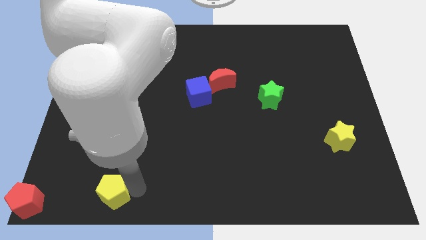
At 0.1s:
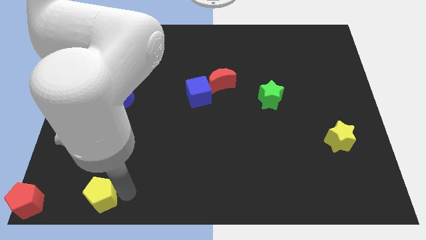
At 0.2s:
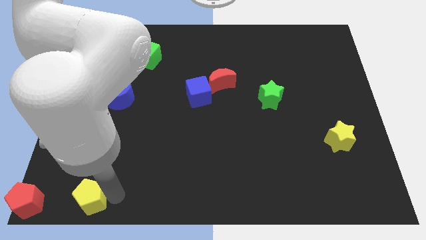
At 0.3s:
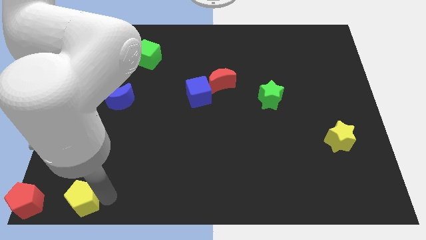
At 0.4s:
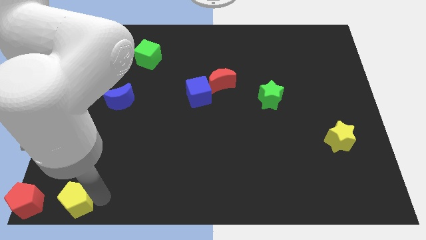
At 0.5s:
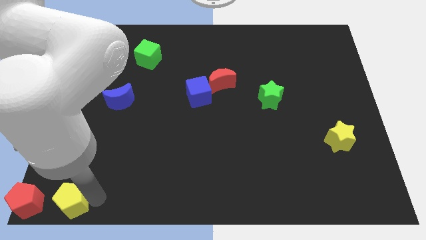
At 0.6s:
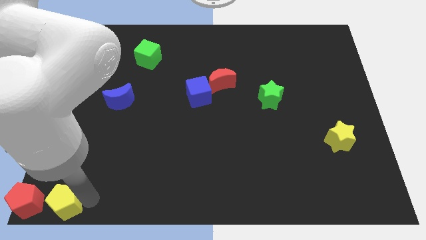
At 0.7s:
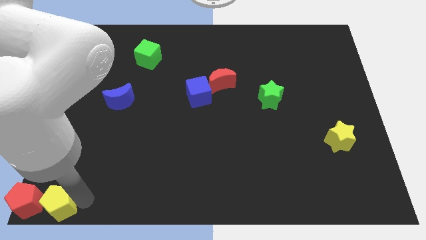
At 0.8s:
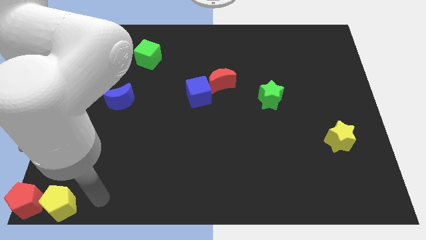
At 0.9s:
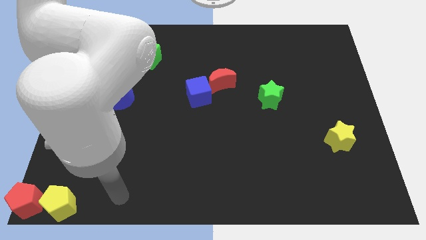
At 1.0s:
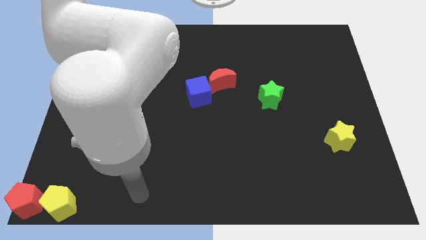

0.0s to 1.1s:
slide yellow pentagon into red pentagon

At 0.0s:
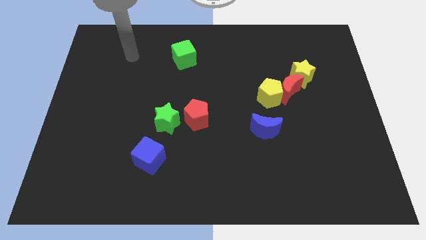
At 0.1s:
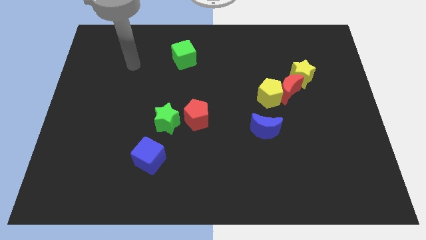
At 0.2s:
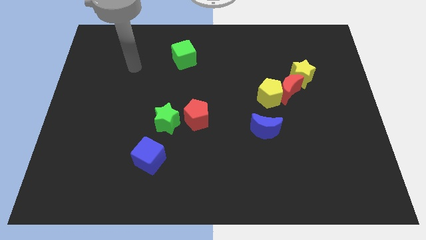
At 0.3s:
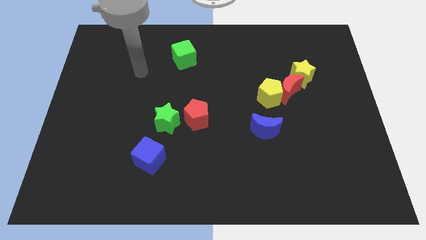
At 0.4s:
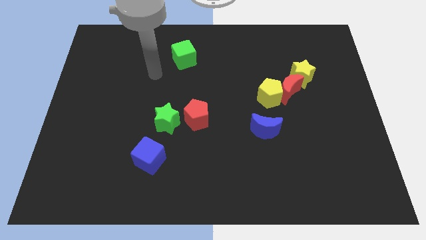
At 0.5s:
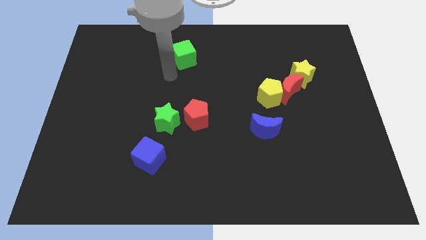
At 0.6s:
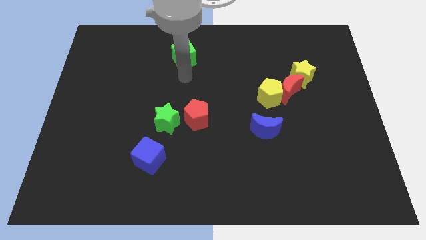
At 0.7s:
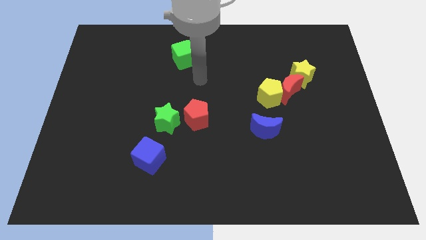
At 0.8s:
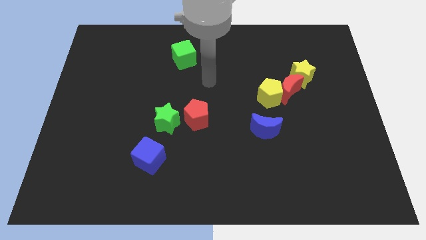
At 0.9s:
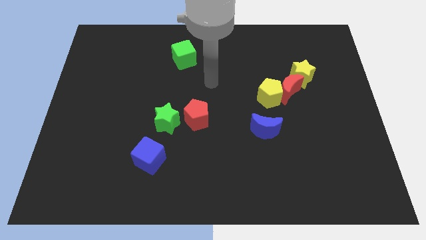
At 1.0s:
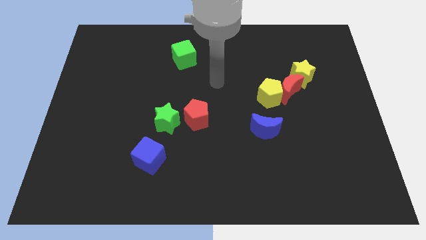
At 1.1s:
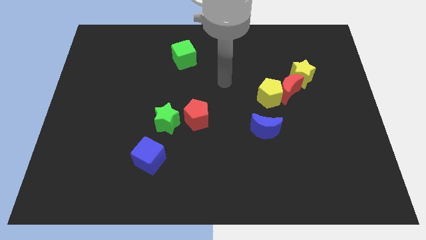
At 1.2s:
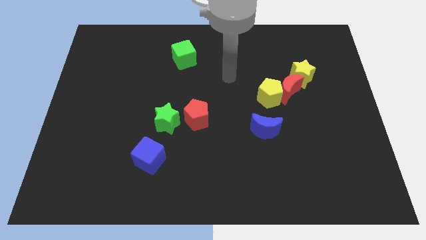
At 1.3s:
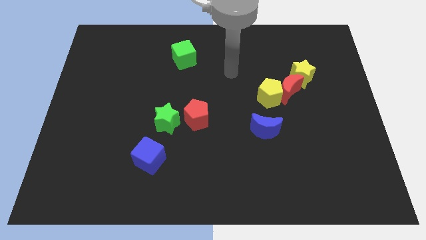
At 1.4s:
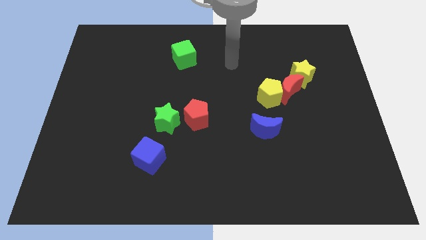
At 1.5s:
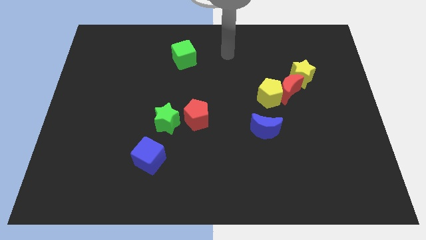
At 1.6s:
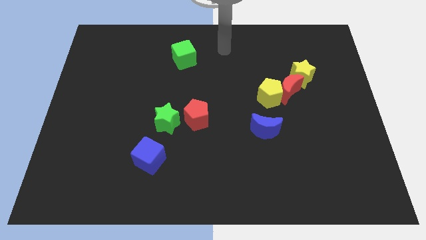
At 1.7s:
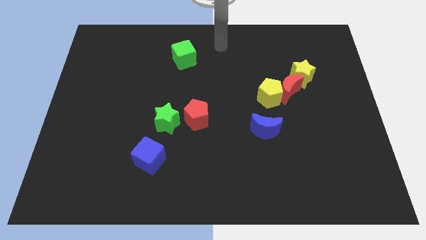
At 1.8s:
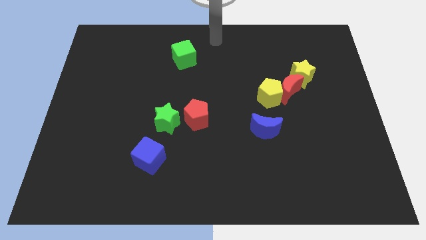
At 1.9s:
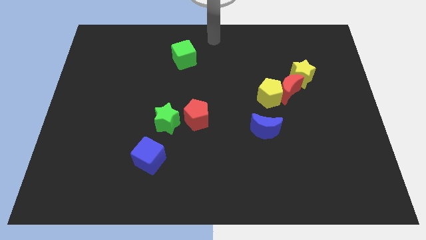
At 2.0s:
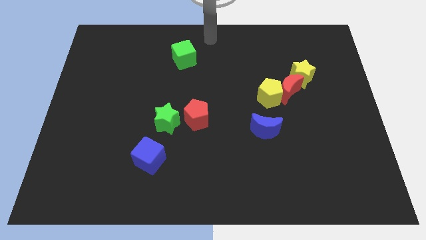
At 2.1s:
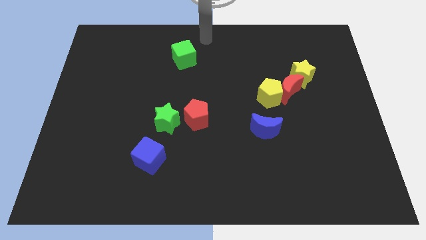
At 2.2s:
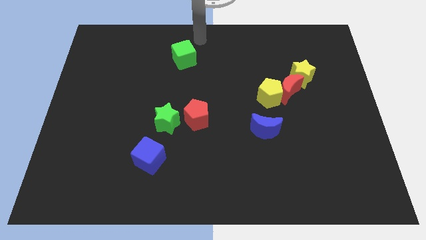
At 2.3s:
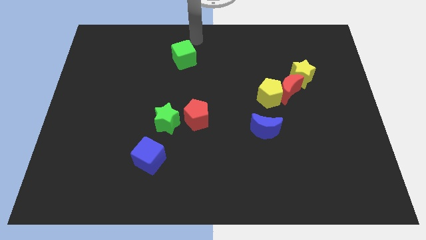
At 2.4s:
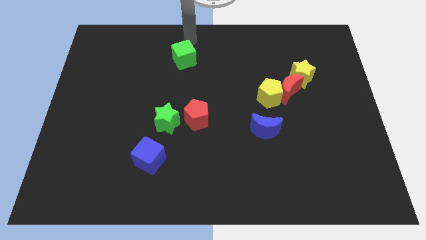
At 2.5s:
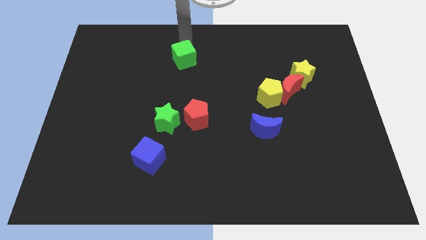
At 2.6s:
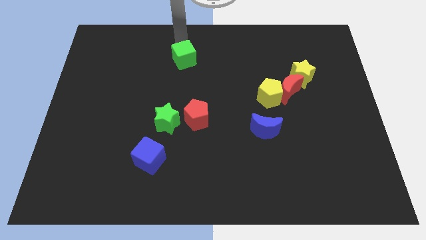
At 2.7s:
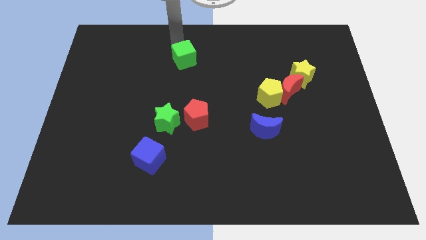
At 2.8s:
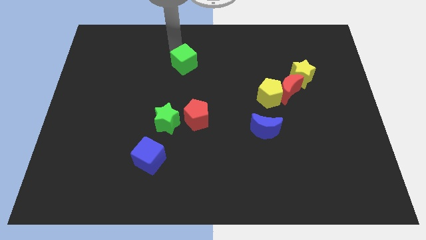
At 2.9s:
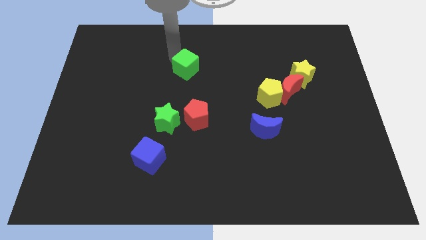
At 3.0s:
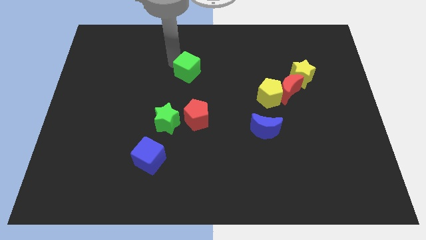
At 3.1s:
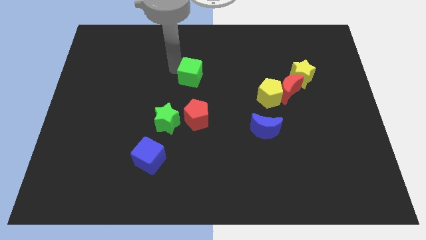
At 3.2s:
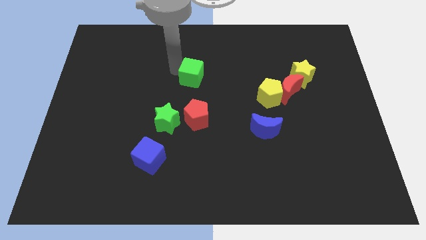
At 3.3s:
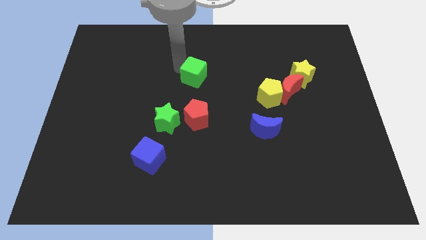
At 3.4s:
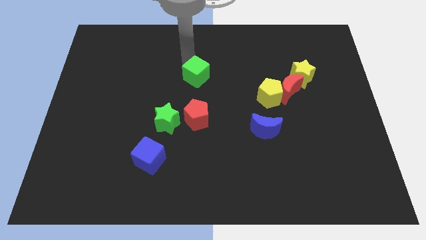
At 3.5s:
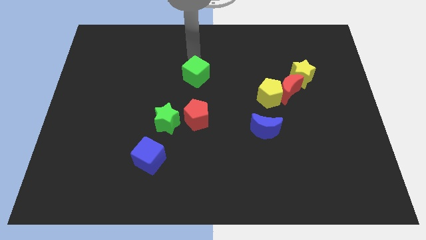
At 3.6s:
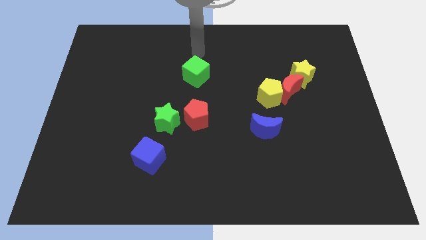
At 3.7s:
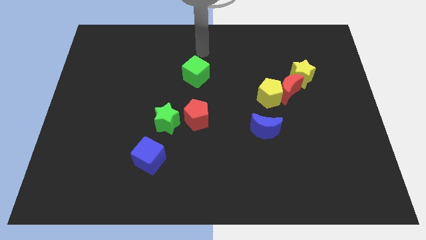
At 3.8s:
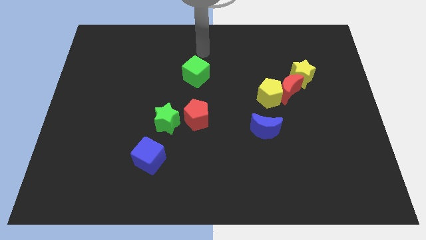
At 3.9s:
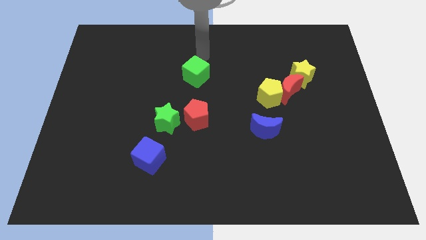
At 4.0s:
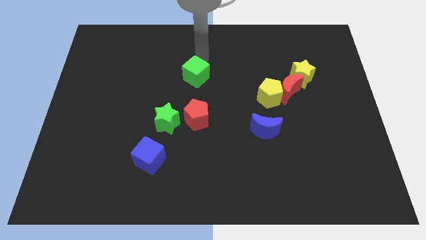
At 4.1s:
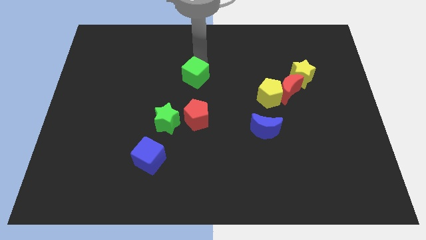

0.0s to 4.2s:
move the green cube to the bottom of the board

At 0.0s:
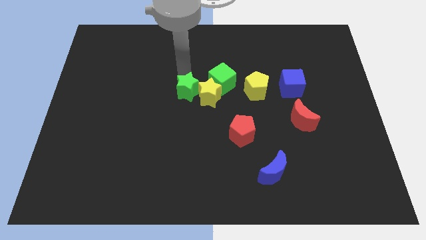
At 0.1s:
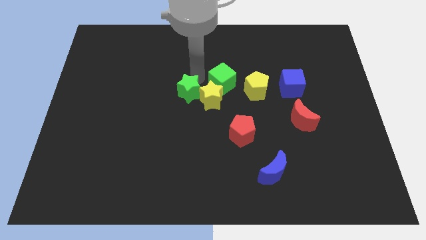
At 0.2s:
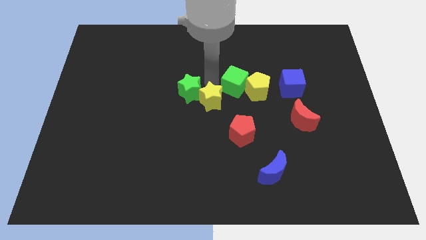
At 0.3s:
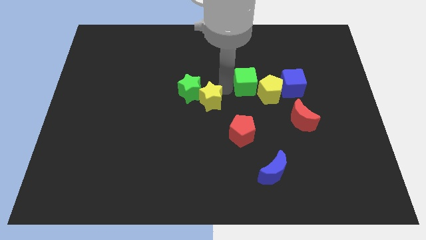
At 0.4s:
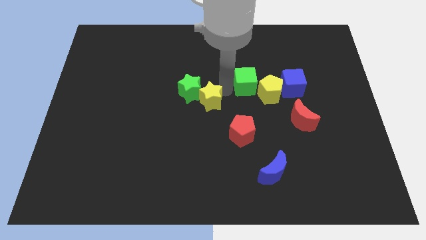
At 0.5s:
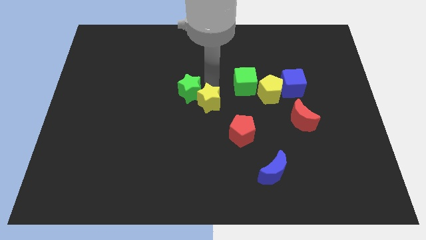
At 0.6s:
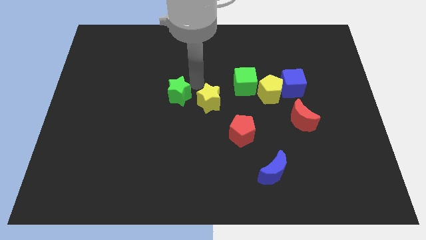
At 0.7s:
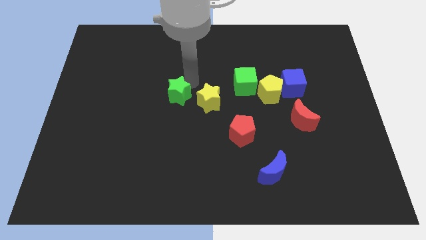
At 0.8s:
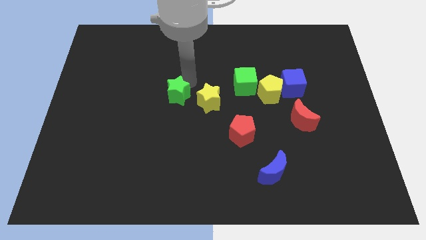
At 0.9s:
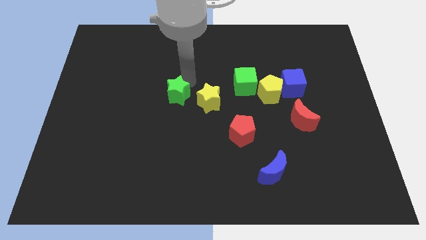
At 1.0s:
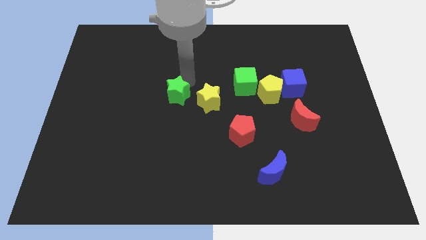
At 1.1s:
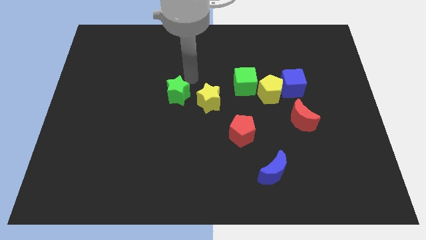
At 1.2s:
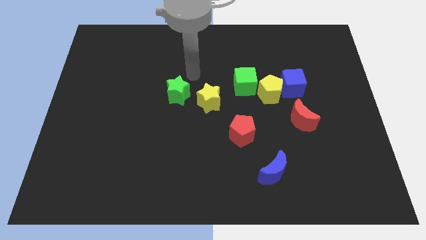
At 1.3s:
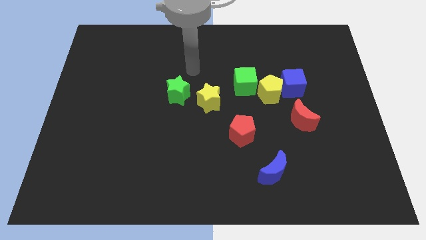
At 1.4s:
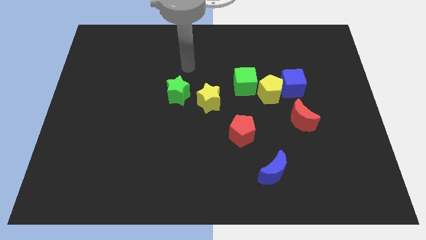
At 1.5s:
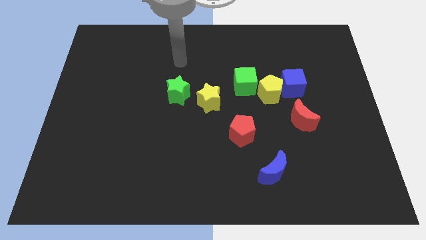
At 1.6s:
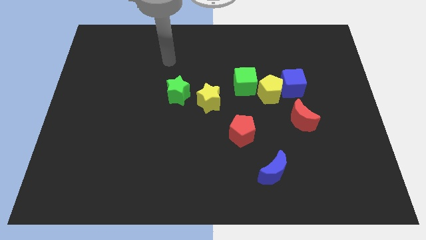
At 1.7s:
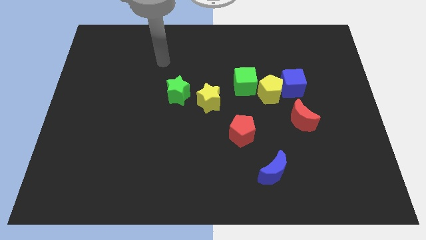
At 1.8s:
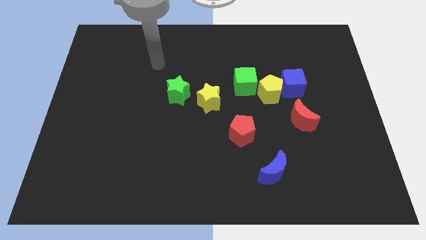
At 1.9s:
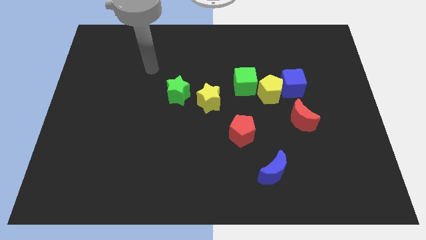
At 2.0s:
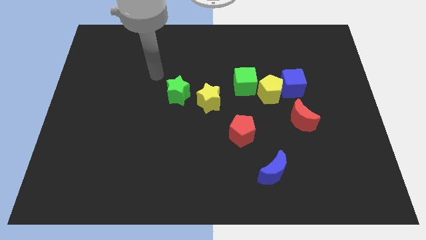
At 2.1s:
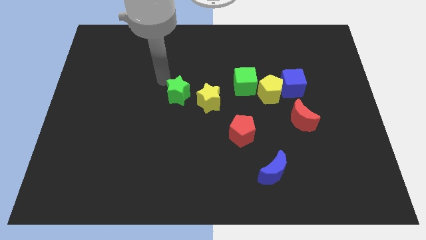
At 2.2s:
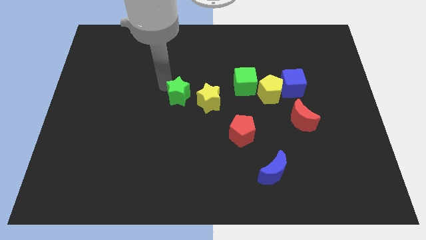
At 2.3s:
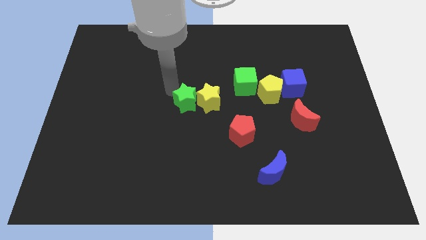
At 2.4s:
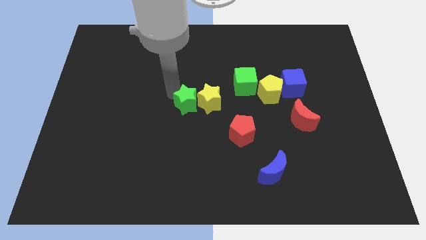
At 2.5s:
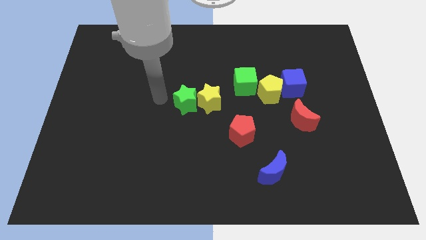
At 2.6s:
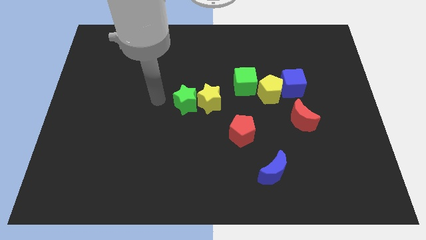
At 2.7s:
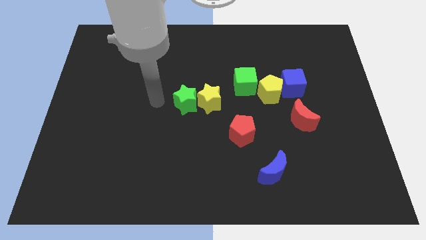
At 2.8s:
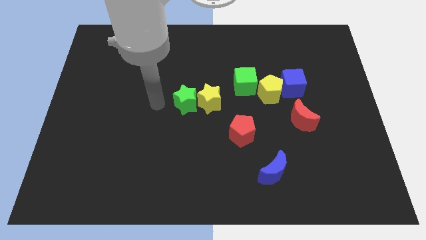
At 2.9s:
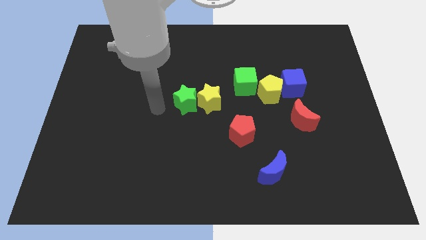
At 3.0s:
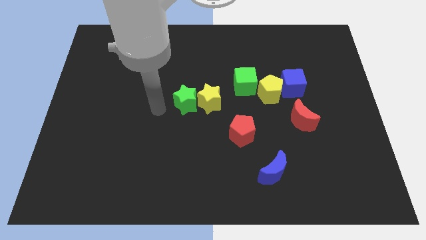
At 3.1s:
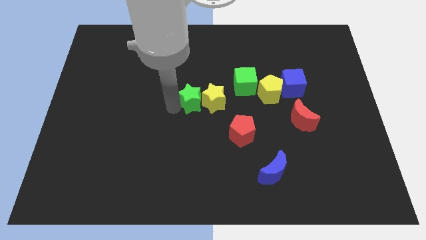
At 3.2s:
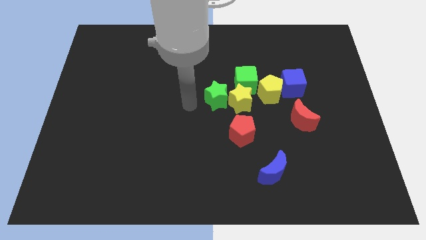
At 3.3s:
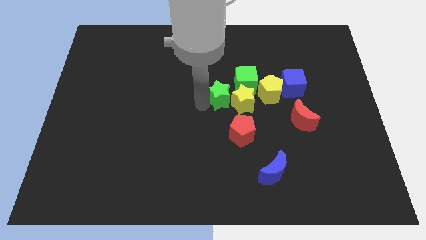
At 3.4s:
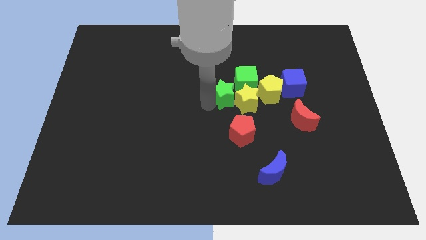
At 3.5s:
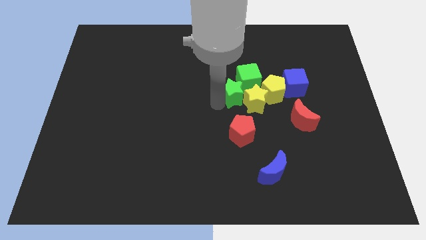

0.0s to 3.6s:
push the green and yellow star into a group of blocks
